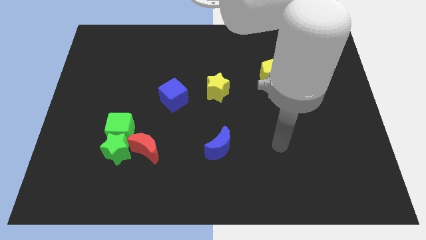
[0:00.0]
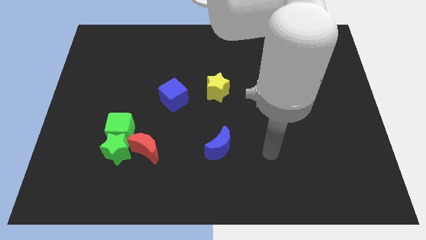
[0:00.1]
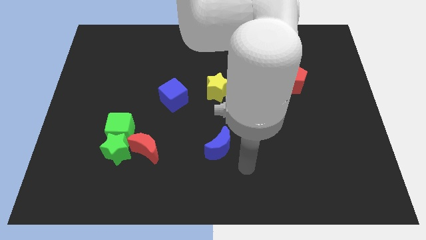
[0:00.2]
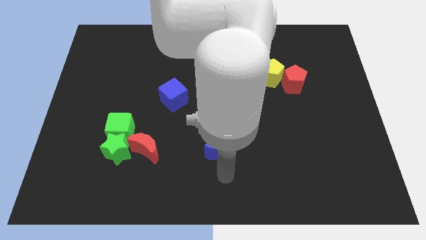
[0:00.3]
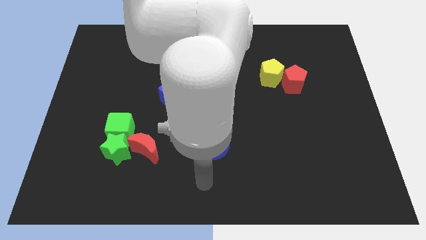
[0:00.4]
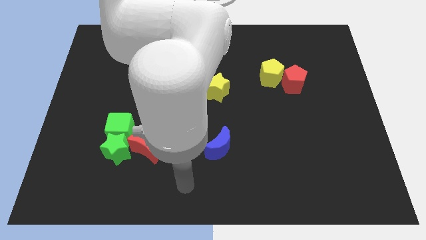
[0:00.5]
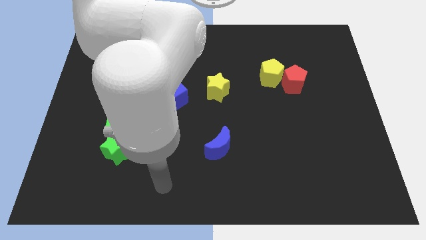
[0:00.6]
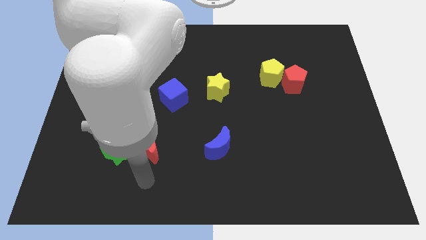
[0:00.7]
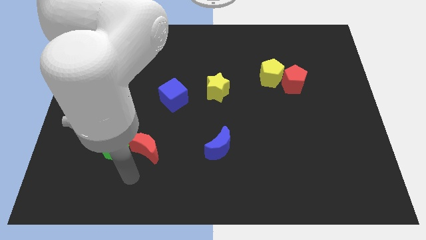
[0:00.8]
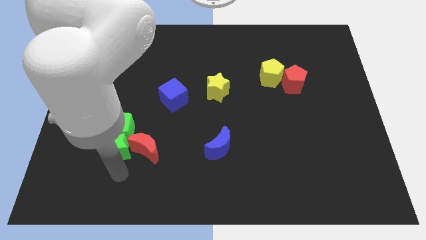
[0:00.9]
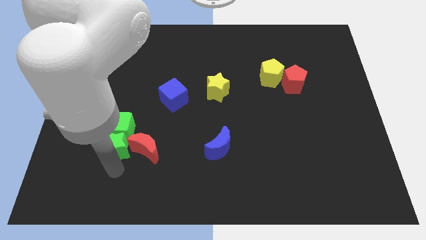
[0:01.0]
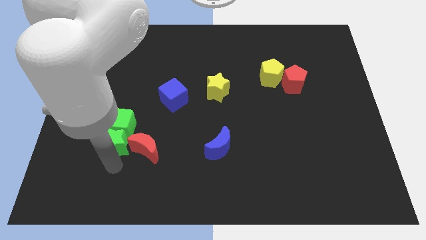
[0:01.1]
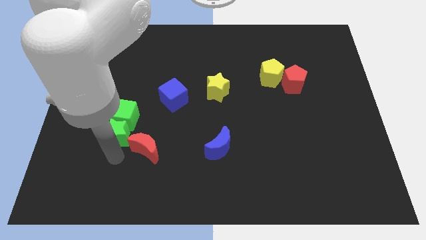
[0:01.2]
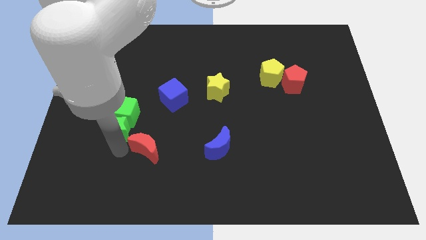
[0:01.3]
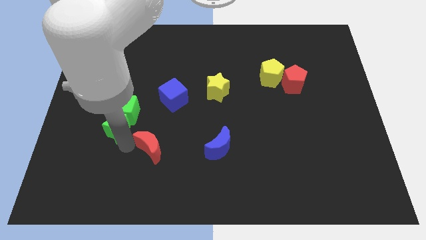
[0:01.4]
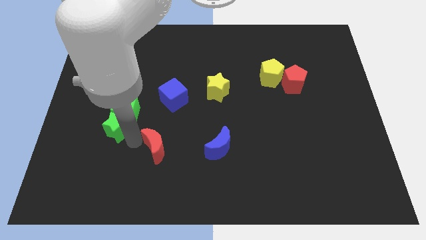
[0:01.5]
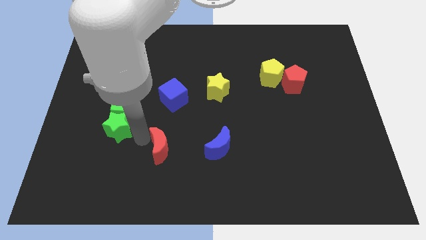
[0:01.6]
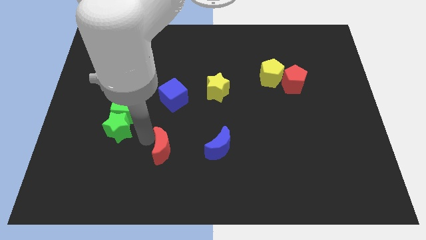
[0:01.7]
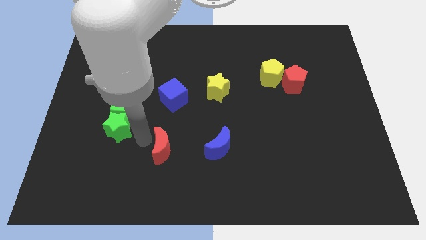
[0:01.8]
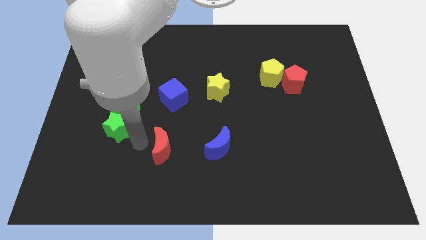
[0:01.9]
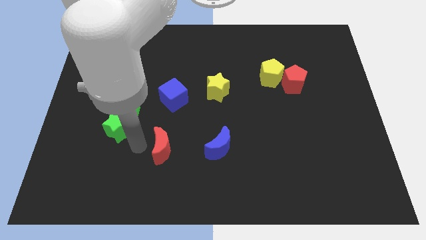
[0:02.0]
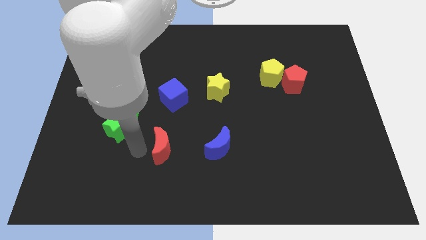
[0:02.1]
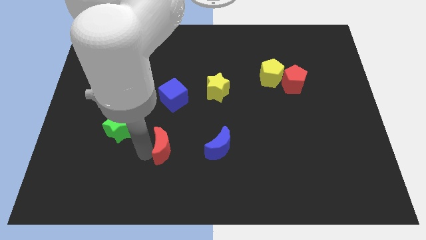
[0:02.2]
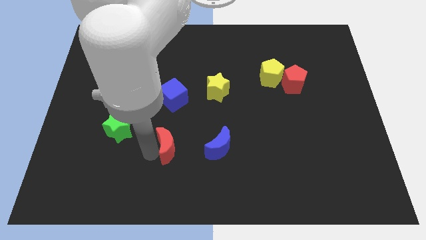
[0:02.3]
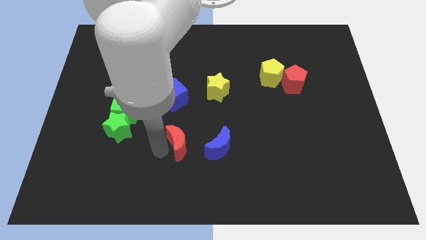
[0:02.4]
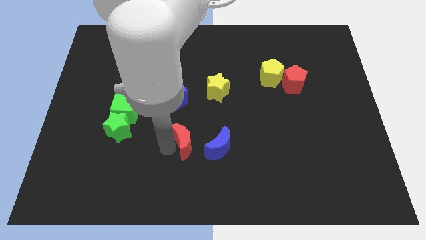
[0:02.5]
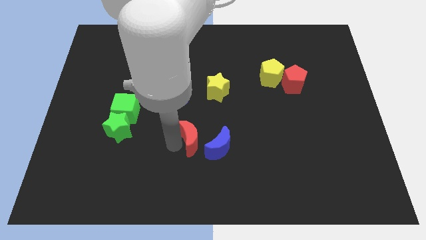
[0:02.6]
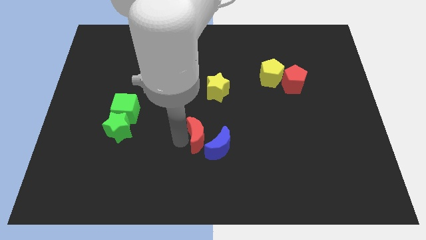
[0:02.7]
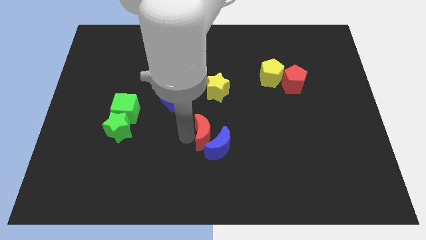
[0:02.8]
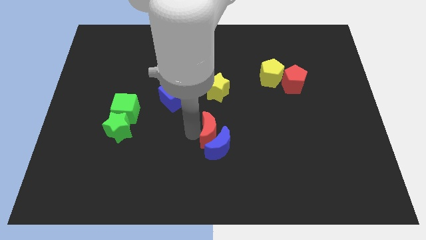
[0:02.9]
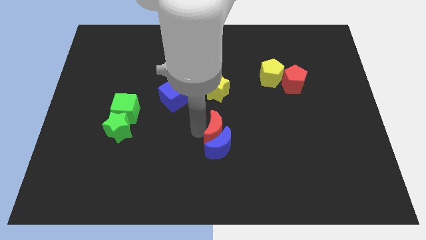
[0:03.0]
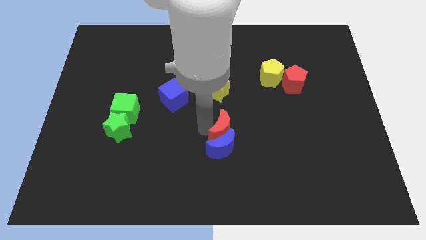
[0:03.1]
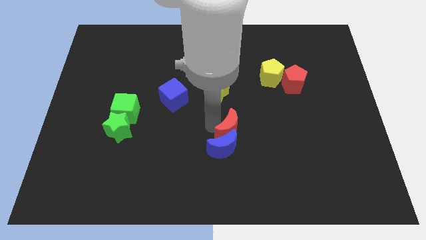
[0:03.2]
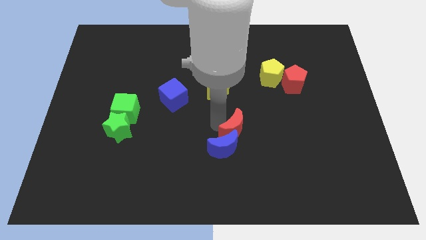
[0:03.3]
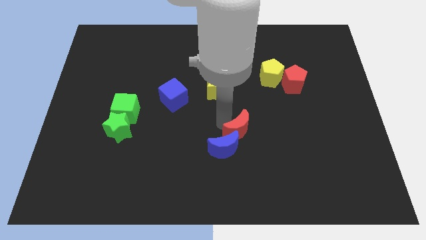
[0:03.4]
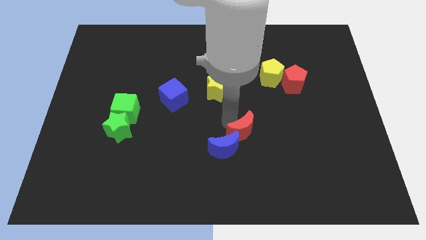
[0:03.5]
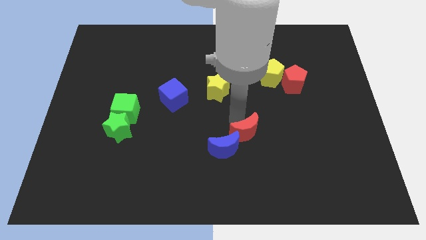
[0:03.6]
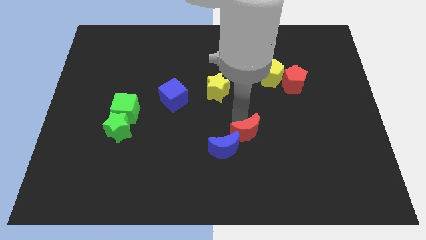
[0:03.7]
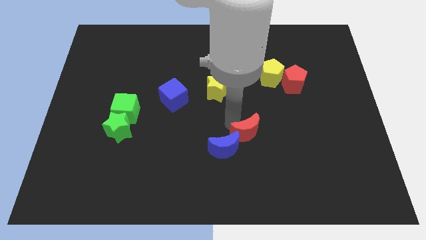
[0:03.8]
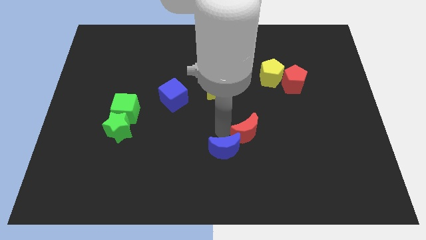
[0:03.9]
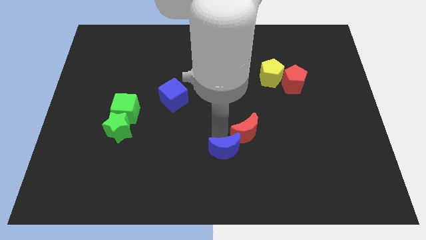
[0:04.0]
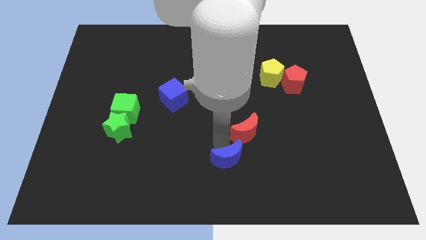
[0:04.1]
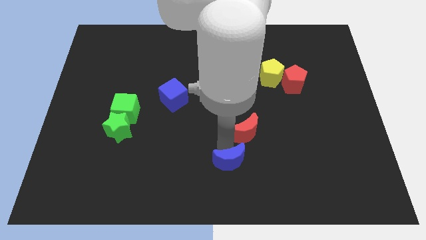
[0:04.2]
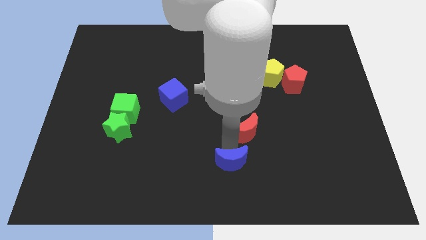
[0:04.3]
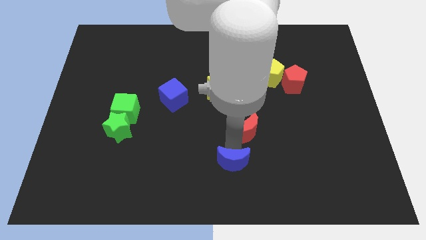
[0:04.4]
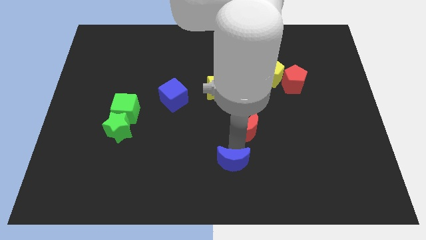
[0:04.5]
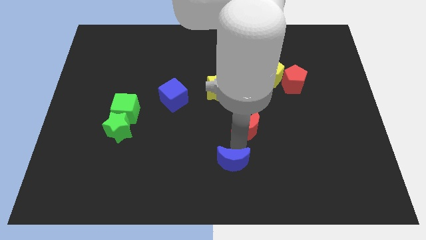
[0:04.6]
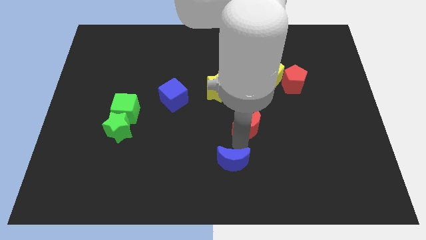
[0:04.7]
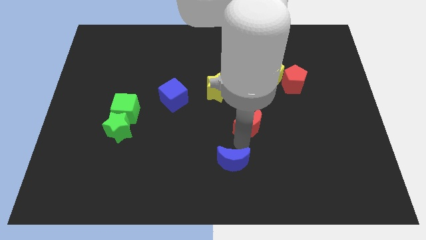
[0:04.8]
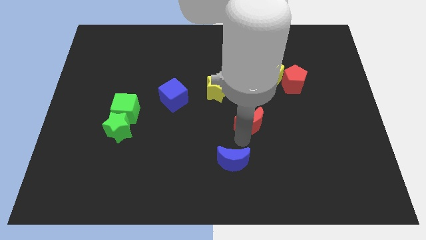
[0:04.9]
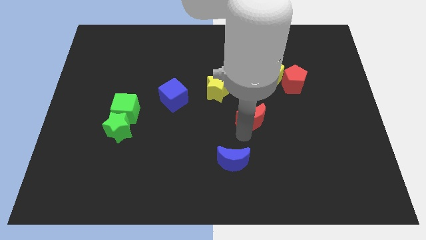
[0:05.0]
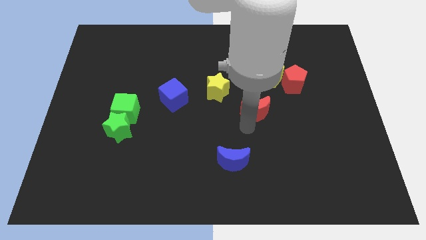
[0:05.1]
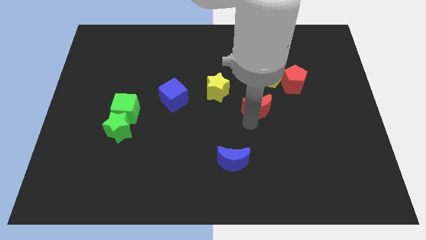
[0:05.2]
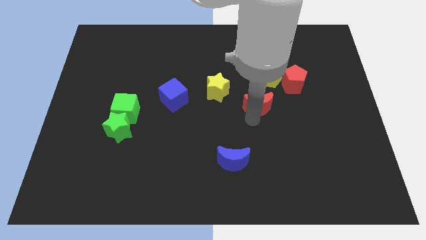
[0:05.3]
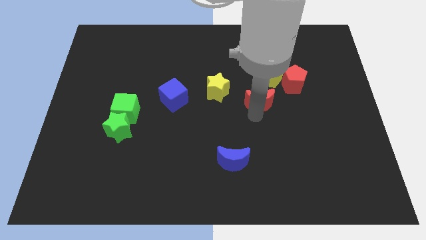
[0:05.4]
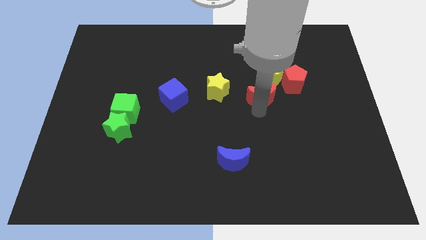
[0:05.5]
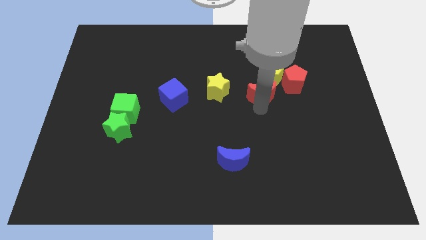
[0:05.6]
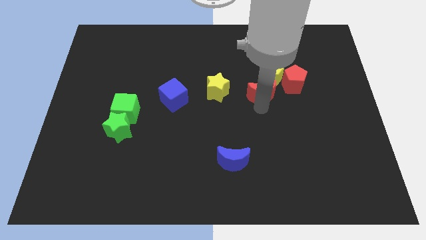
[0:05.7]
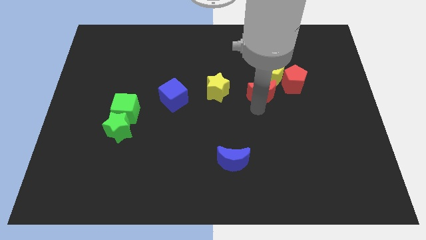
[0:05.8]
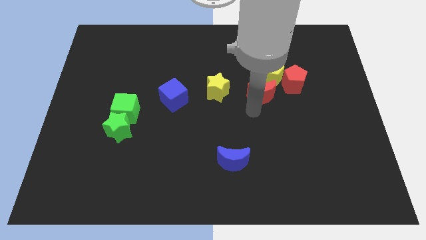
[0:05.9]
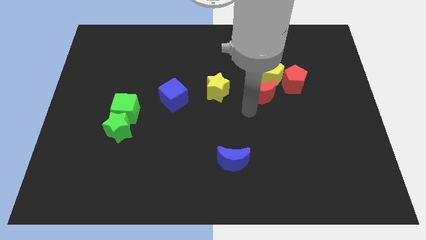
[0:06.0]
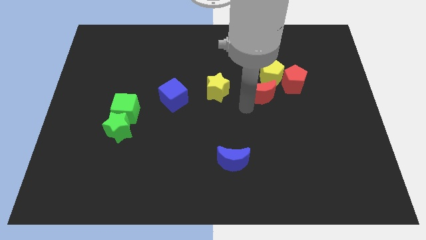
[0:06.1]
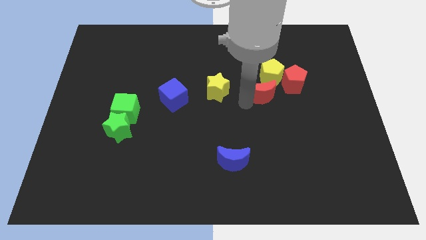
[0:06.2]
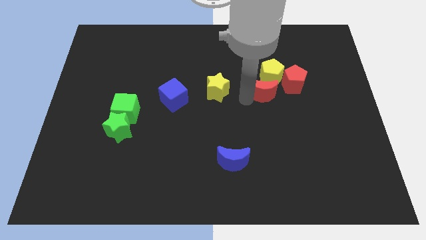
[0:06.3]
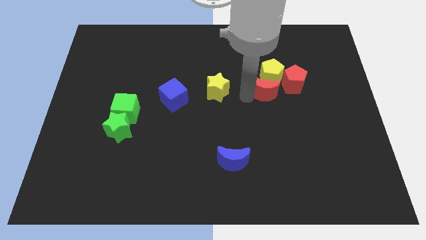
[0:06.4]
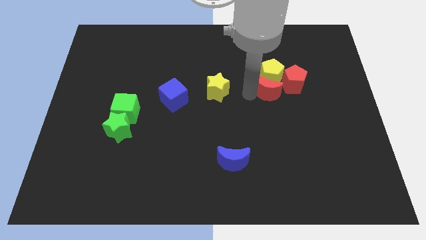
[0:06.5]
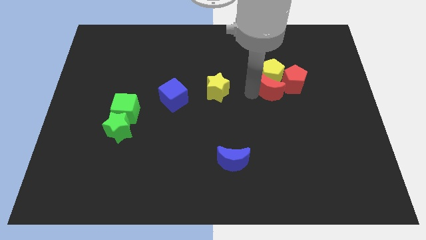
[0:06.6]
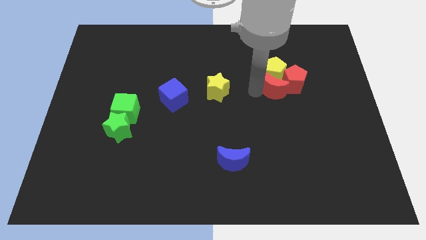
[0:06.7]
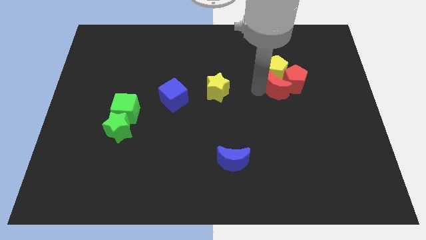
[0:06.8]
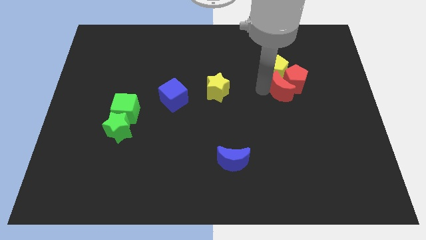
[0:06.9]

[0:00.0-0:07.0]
push the red moon close to the red pentagon

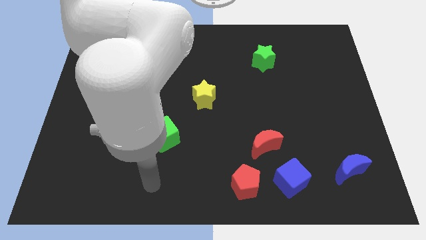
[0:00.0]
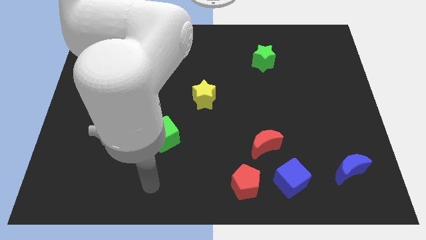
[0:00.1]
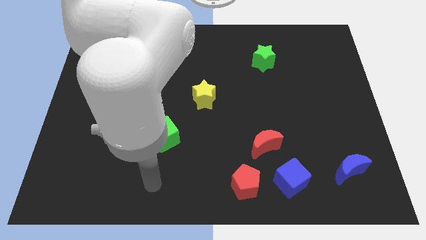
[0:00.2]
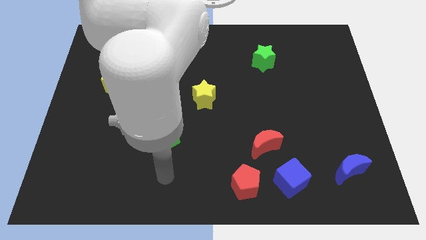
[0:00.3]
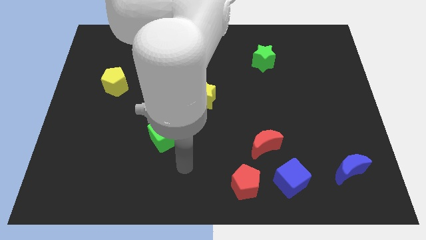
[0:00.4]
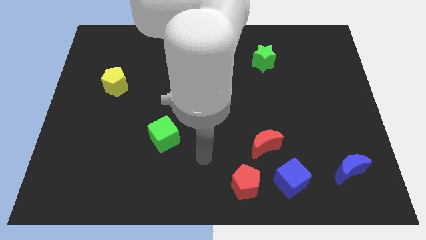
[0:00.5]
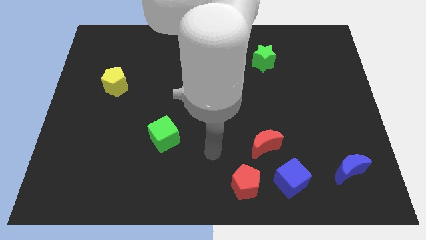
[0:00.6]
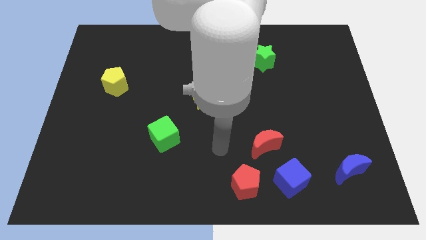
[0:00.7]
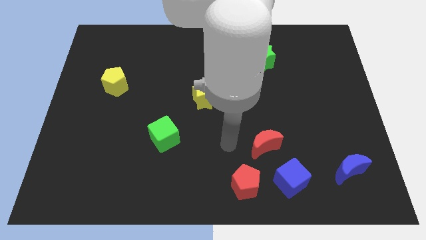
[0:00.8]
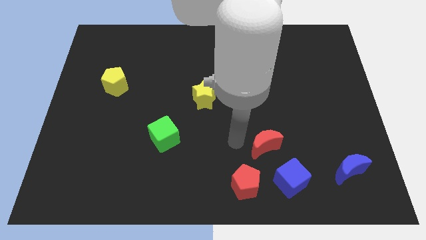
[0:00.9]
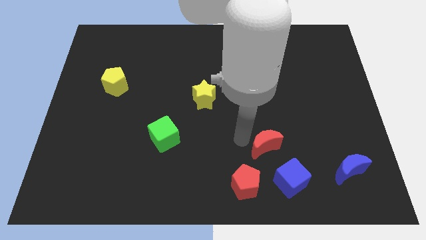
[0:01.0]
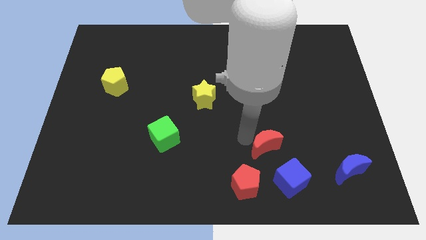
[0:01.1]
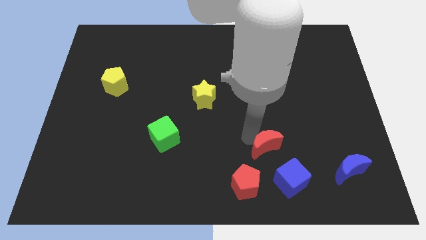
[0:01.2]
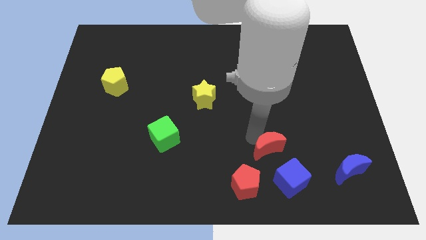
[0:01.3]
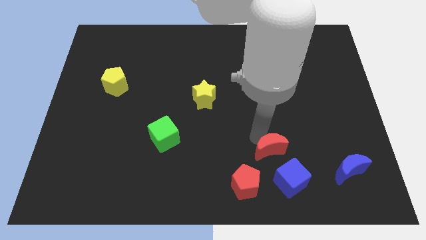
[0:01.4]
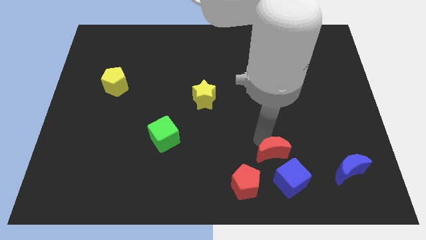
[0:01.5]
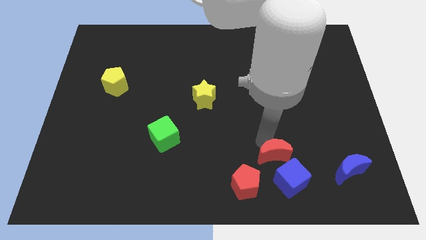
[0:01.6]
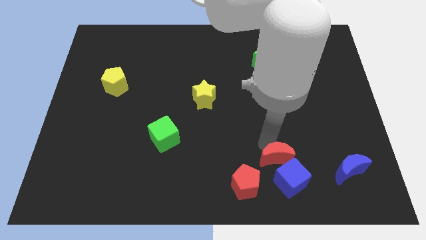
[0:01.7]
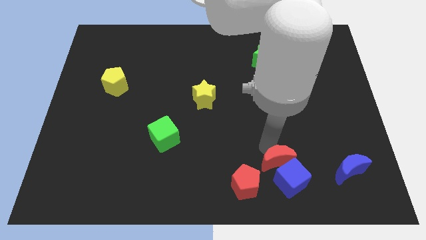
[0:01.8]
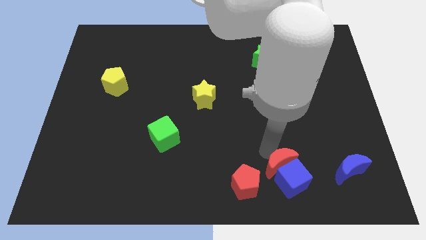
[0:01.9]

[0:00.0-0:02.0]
move the red moon close to the blue cube
